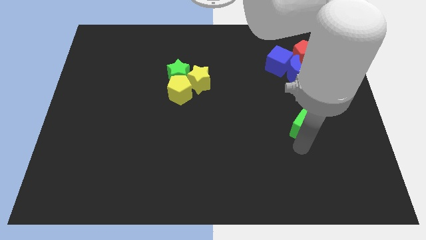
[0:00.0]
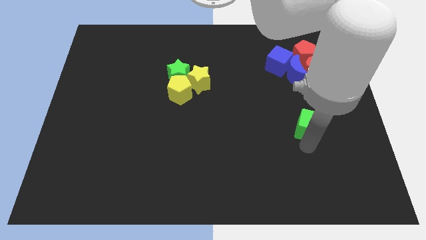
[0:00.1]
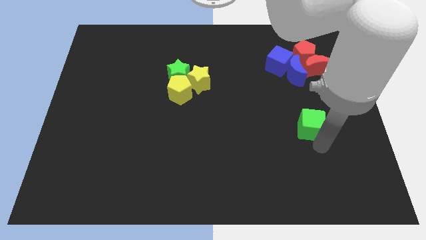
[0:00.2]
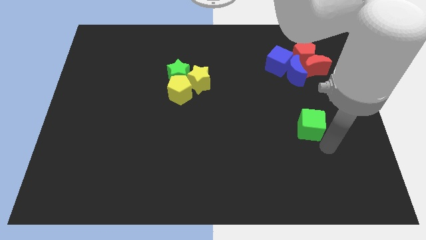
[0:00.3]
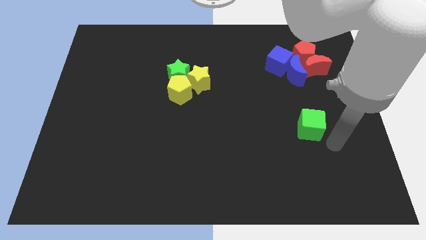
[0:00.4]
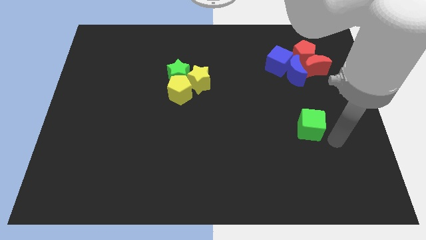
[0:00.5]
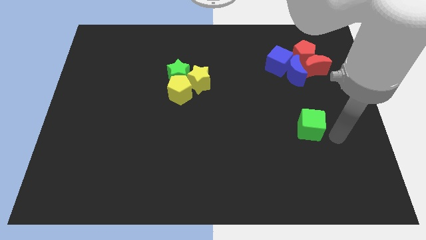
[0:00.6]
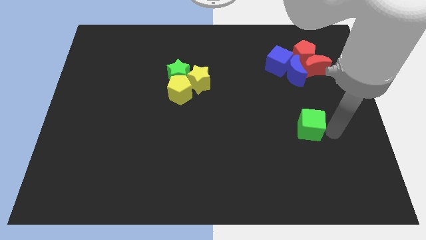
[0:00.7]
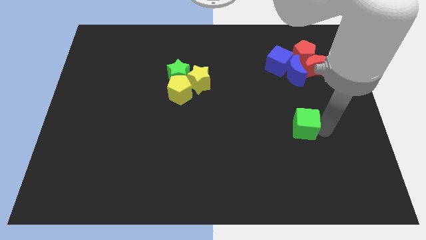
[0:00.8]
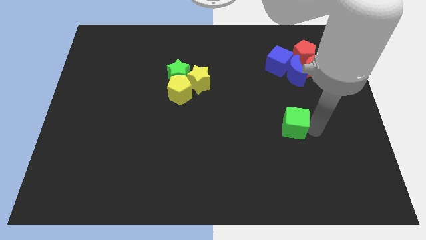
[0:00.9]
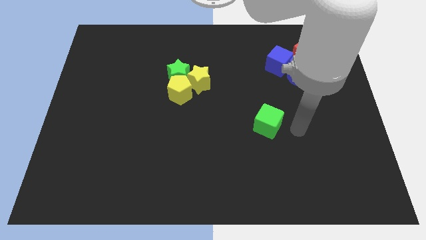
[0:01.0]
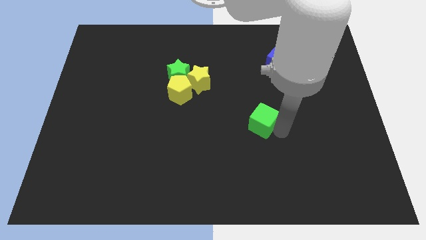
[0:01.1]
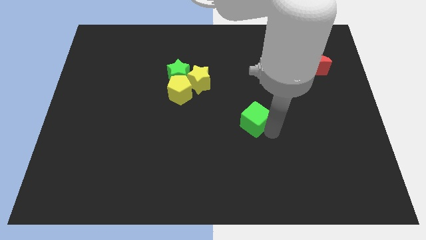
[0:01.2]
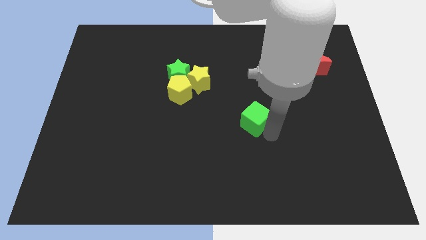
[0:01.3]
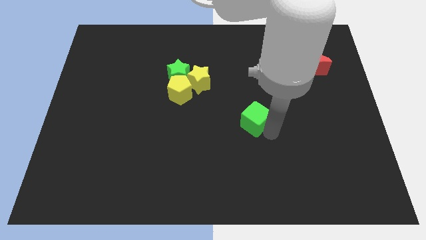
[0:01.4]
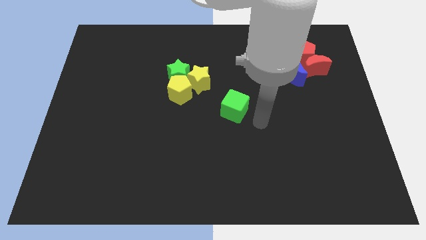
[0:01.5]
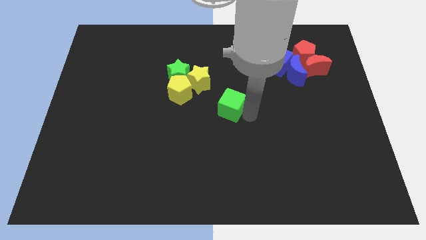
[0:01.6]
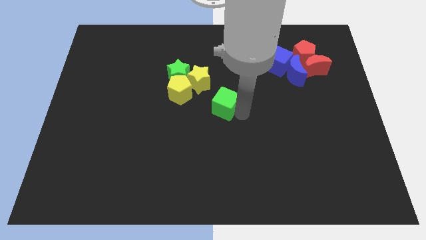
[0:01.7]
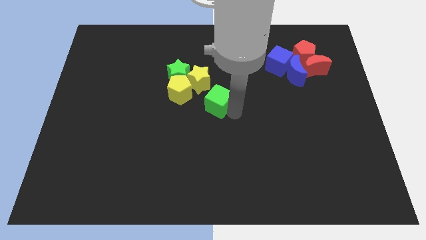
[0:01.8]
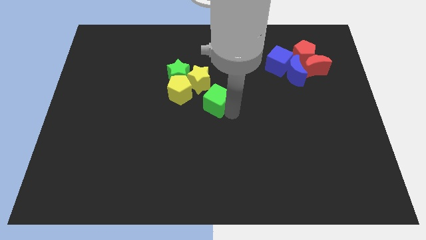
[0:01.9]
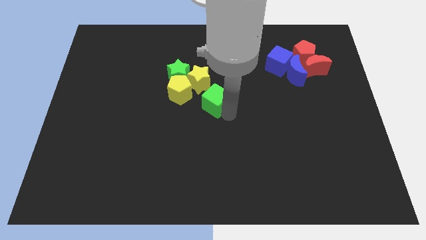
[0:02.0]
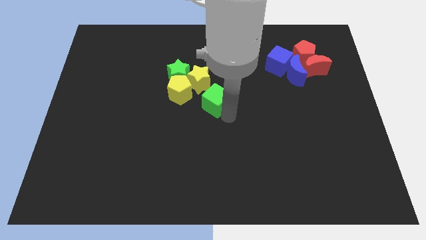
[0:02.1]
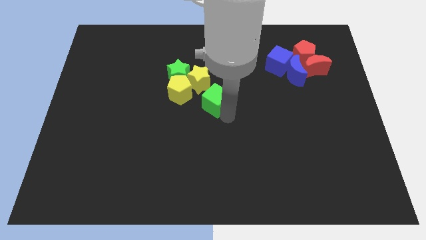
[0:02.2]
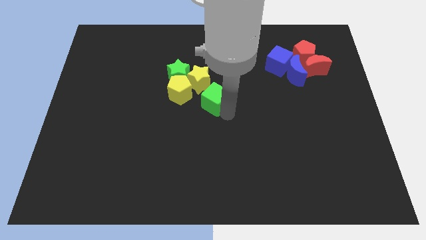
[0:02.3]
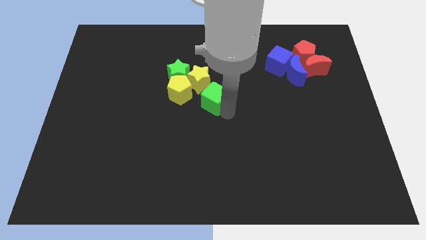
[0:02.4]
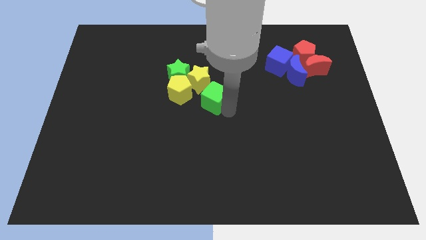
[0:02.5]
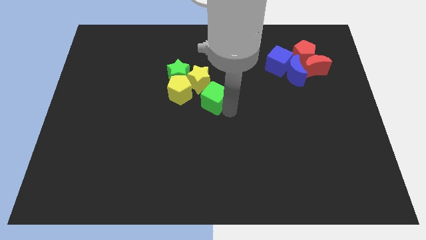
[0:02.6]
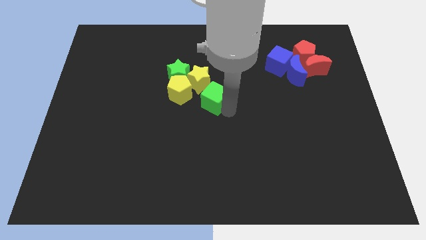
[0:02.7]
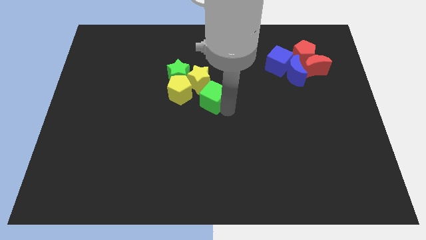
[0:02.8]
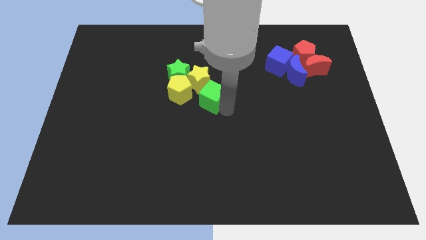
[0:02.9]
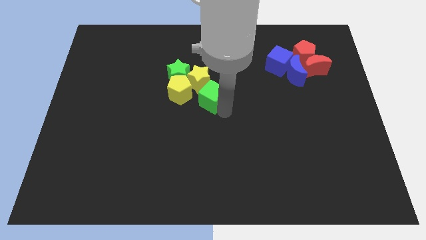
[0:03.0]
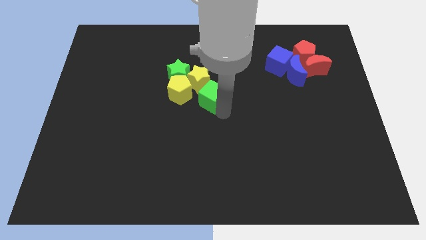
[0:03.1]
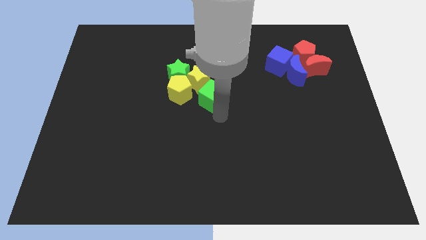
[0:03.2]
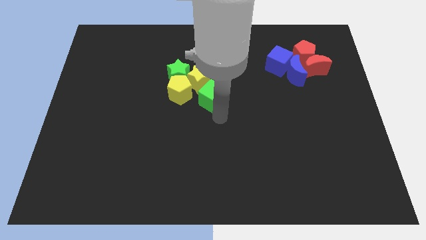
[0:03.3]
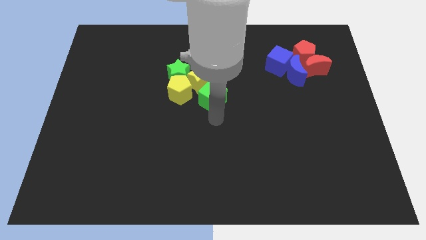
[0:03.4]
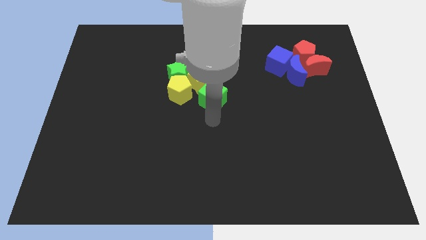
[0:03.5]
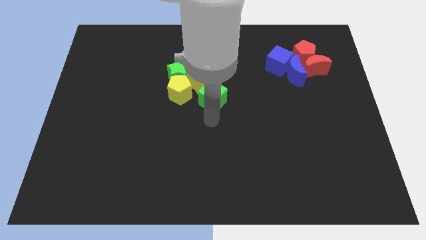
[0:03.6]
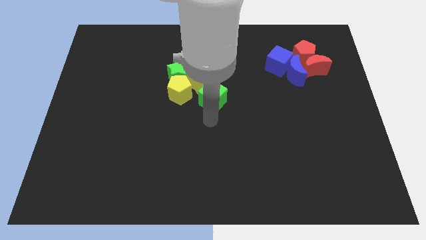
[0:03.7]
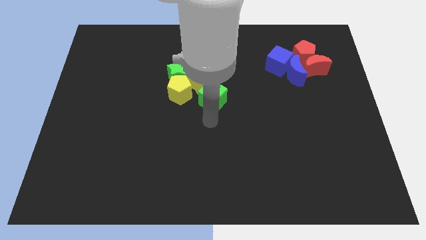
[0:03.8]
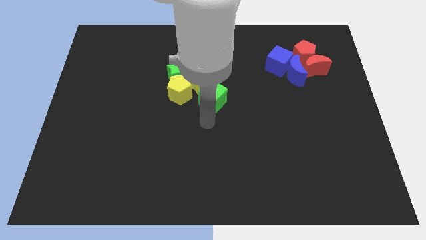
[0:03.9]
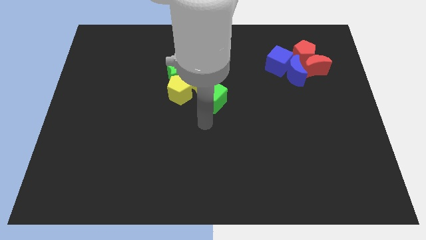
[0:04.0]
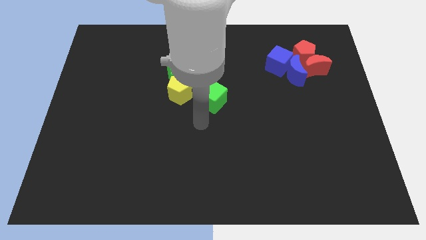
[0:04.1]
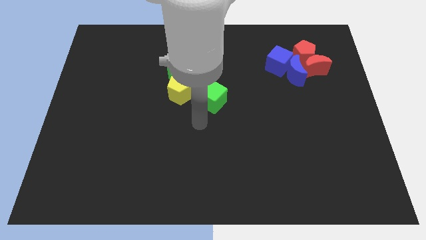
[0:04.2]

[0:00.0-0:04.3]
push the green cube close to the yellow star

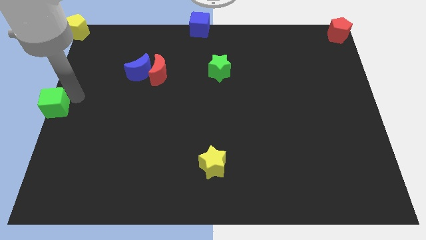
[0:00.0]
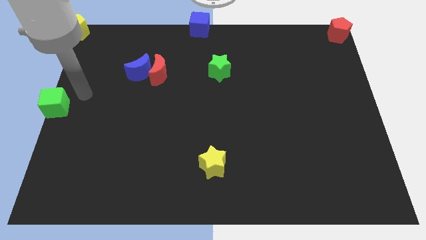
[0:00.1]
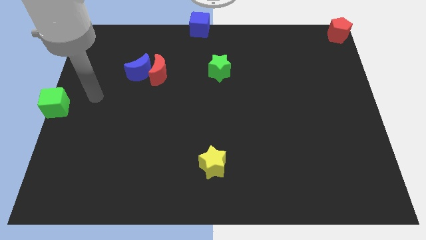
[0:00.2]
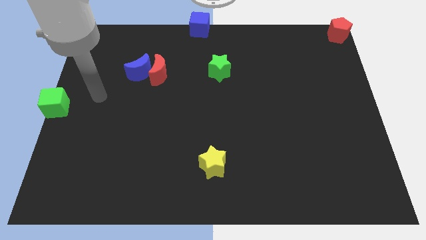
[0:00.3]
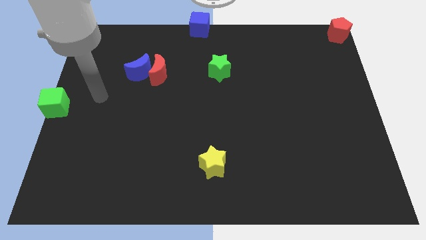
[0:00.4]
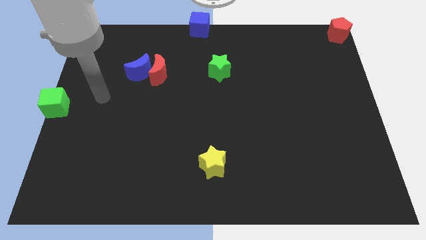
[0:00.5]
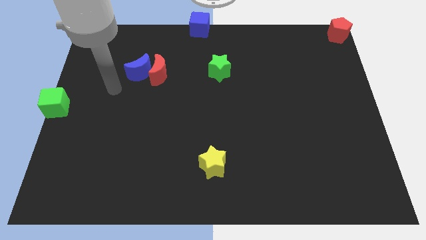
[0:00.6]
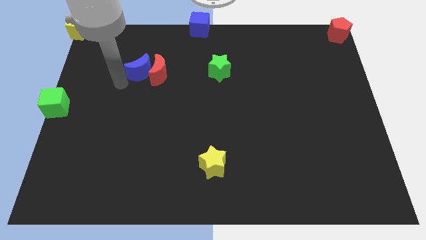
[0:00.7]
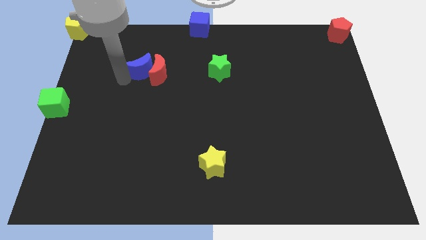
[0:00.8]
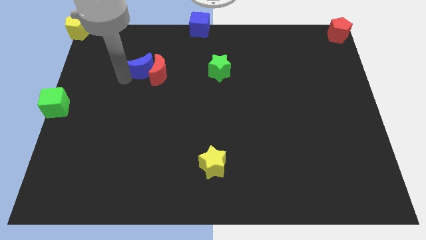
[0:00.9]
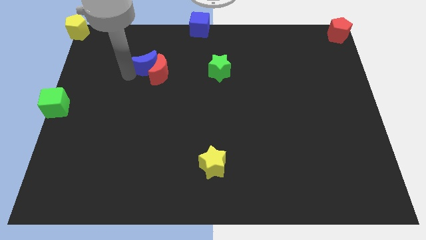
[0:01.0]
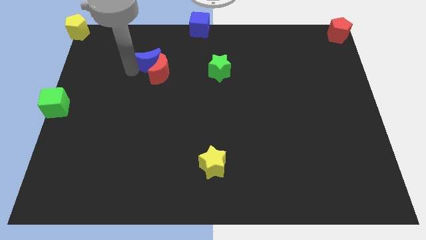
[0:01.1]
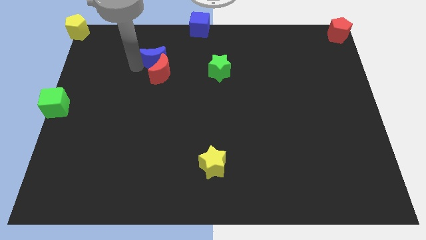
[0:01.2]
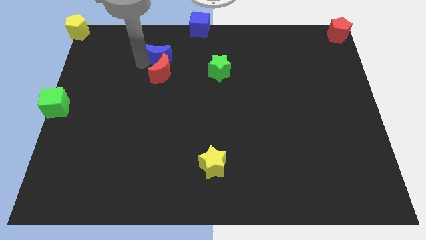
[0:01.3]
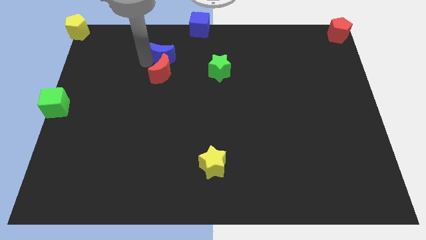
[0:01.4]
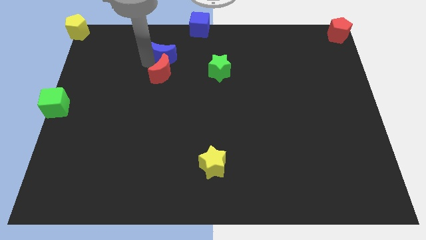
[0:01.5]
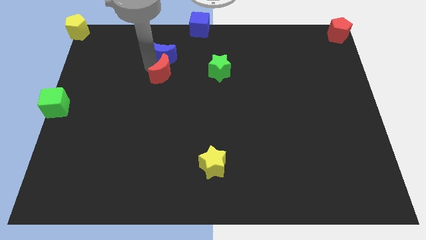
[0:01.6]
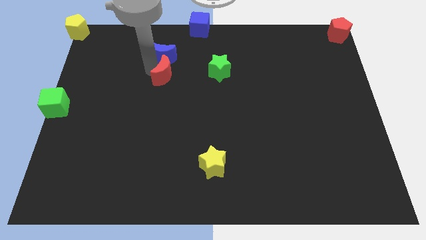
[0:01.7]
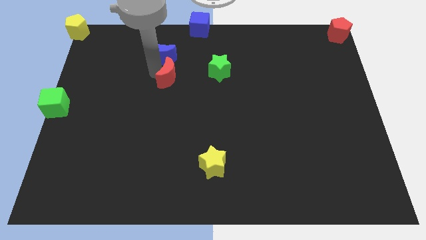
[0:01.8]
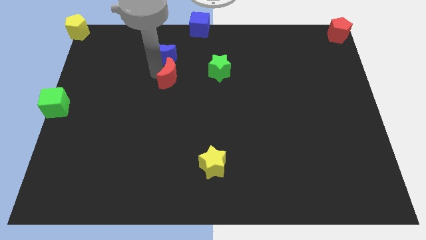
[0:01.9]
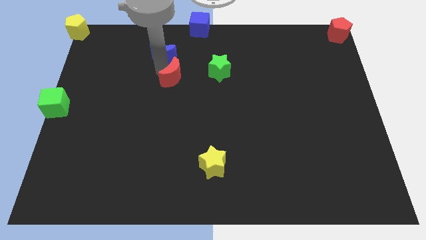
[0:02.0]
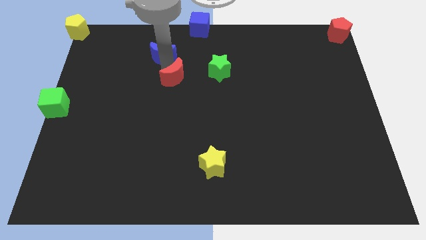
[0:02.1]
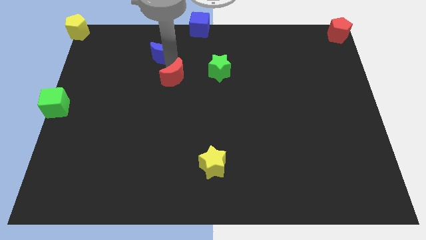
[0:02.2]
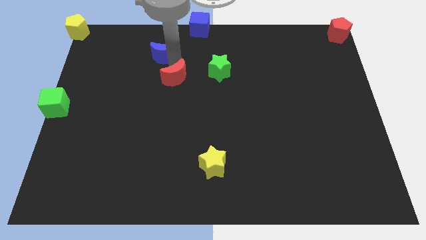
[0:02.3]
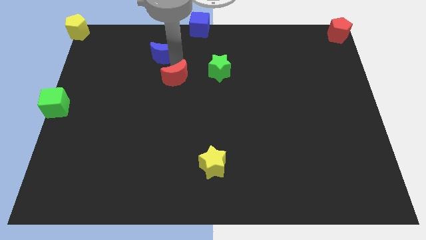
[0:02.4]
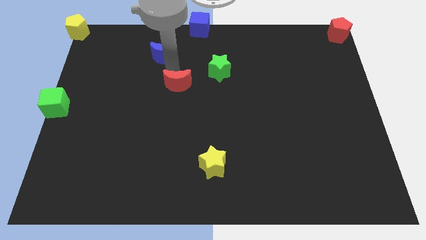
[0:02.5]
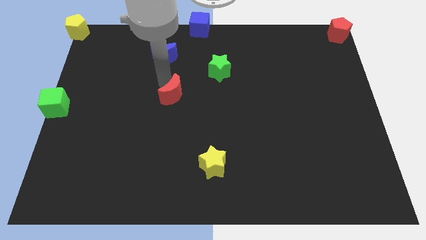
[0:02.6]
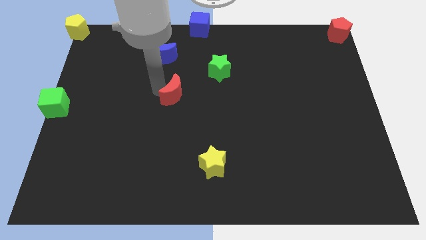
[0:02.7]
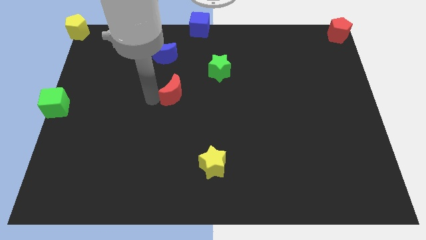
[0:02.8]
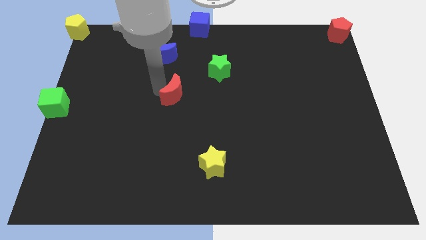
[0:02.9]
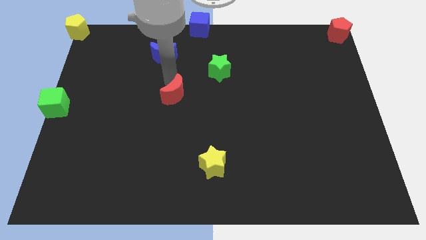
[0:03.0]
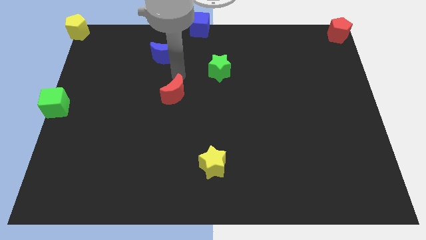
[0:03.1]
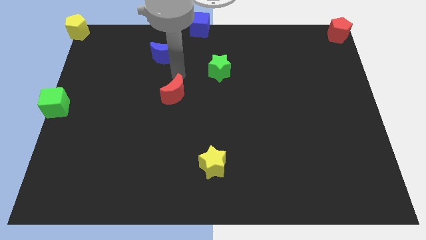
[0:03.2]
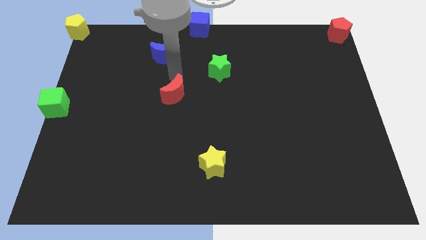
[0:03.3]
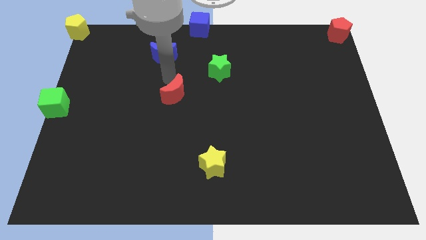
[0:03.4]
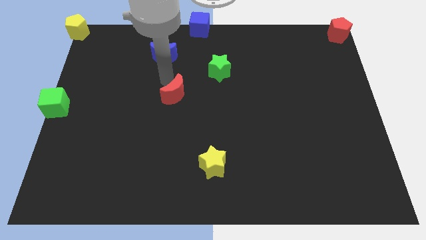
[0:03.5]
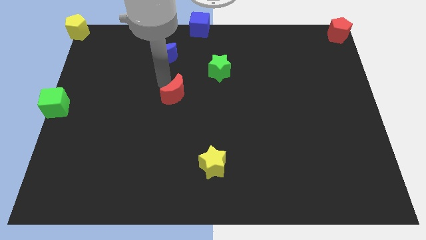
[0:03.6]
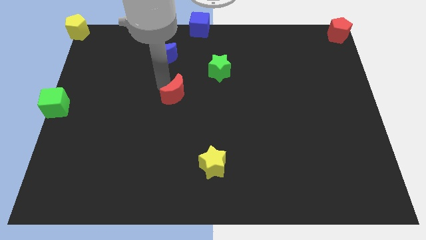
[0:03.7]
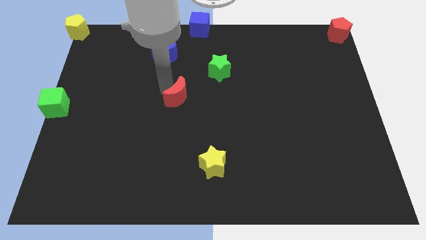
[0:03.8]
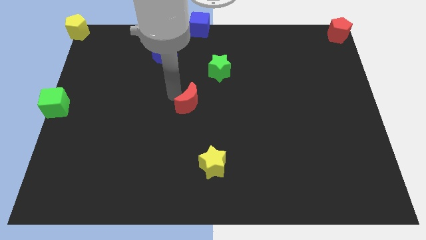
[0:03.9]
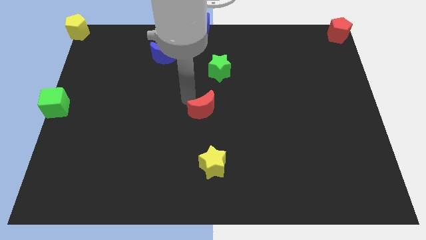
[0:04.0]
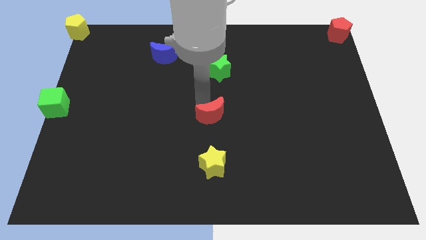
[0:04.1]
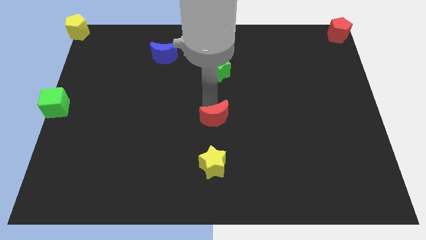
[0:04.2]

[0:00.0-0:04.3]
separate the blue crescent and the red crescent

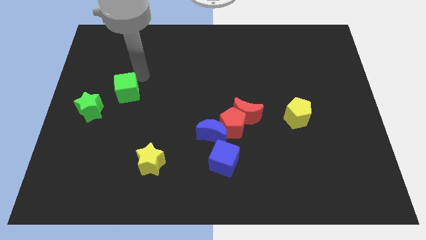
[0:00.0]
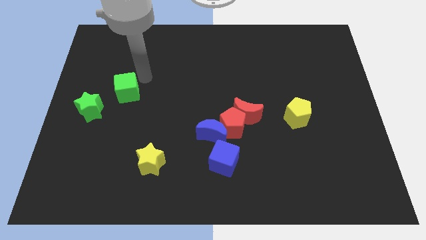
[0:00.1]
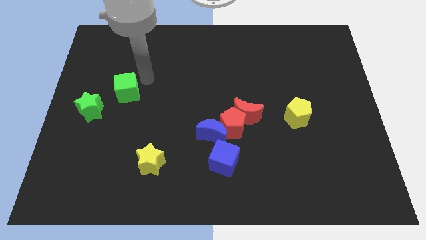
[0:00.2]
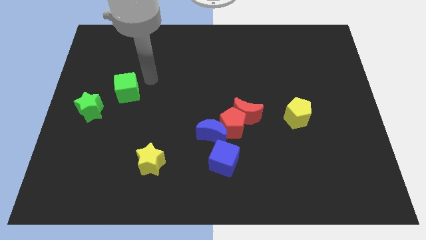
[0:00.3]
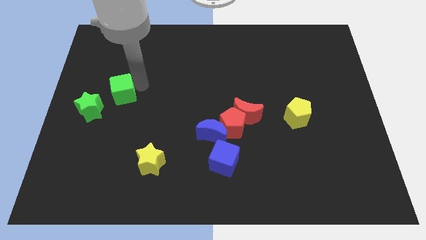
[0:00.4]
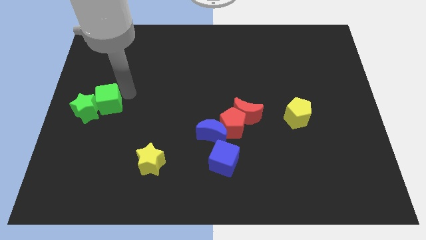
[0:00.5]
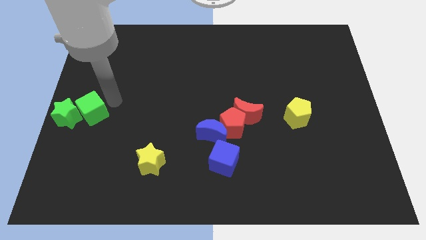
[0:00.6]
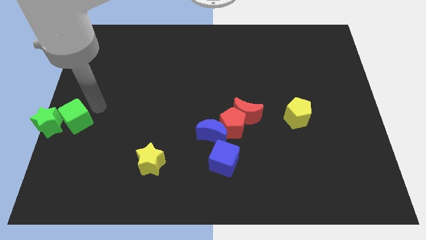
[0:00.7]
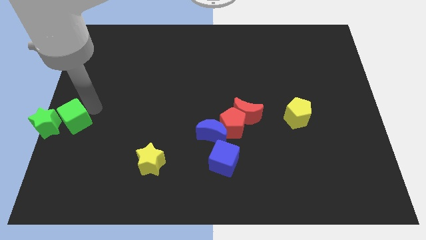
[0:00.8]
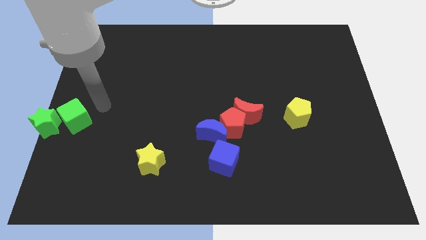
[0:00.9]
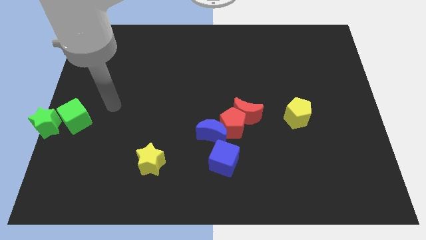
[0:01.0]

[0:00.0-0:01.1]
push the green cube into the green star
